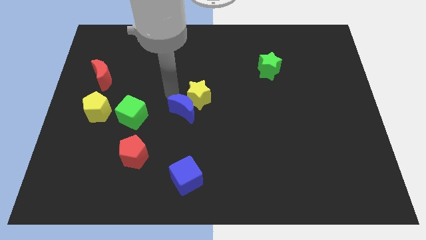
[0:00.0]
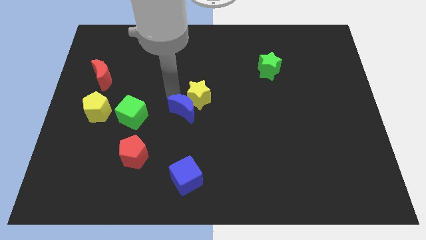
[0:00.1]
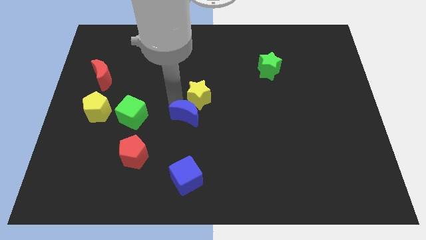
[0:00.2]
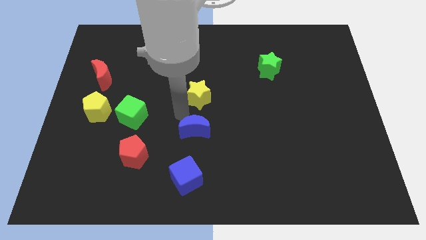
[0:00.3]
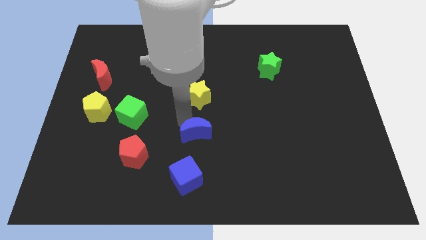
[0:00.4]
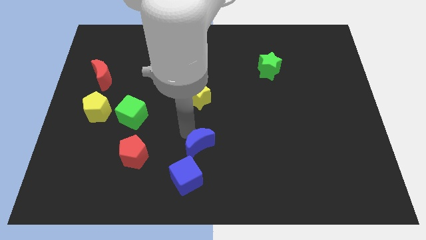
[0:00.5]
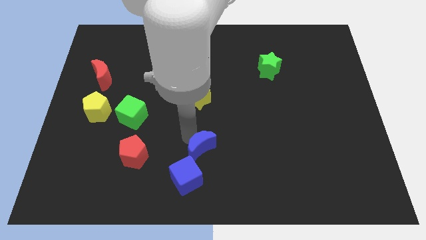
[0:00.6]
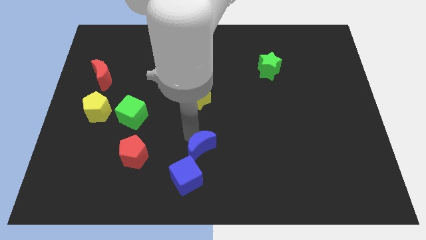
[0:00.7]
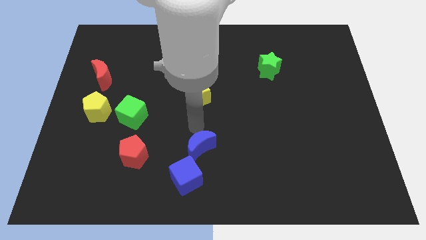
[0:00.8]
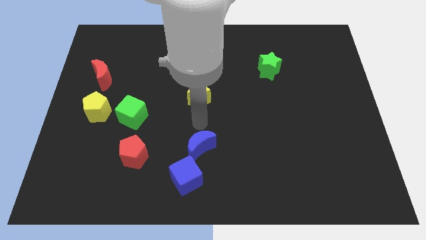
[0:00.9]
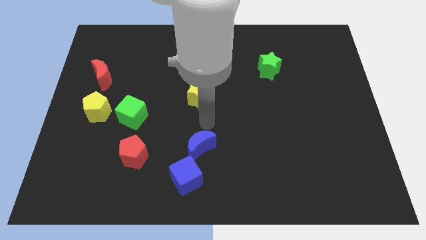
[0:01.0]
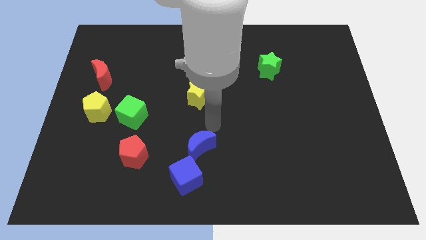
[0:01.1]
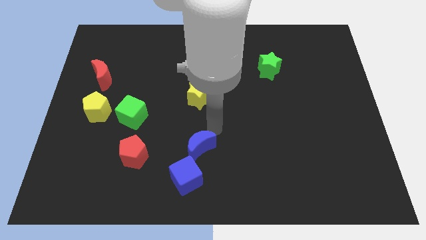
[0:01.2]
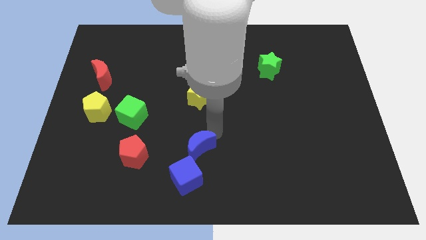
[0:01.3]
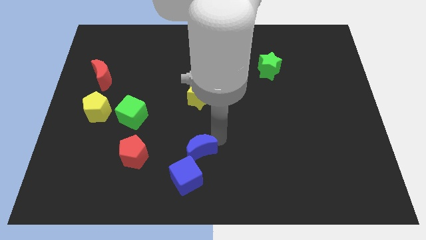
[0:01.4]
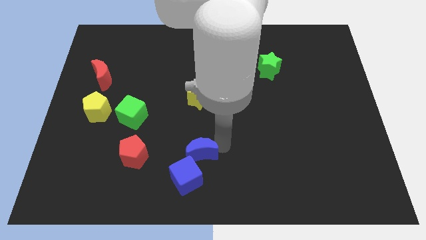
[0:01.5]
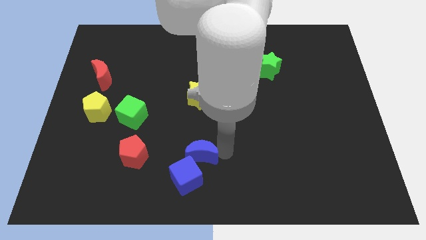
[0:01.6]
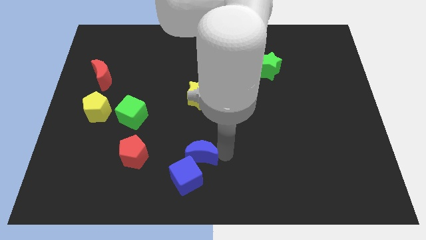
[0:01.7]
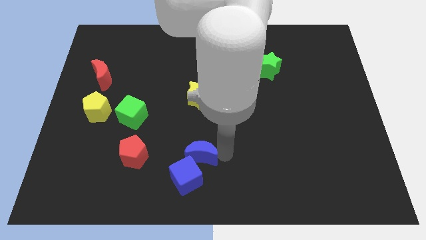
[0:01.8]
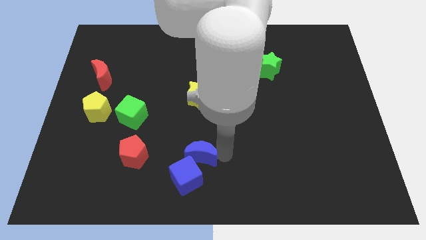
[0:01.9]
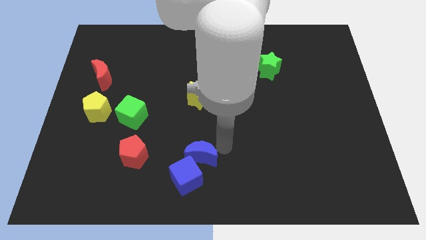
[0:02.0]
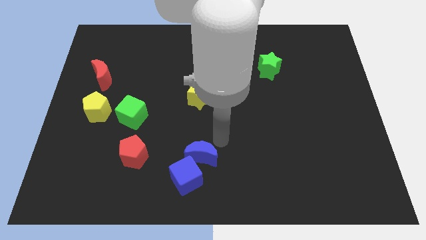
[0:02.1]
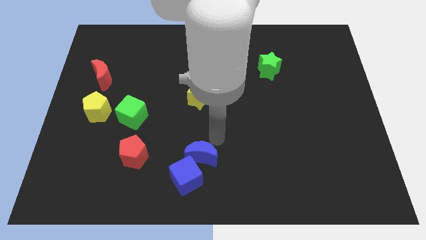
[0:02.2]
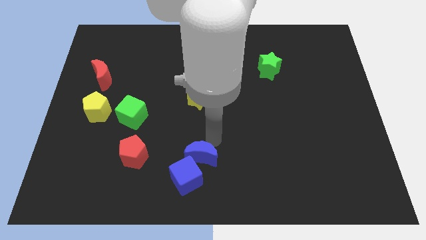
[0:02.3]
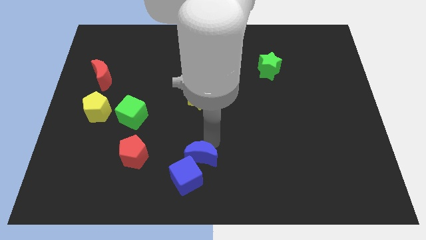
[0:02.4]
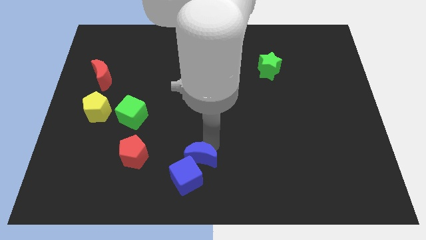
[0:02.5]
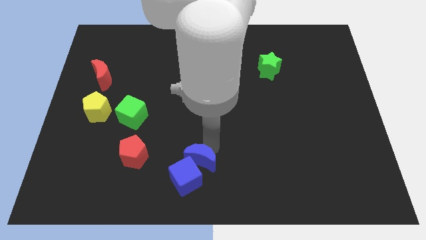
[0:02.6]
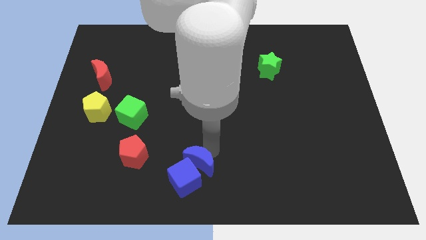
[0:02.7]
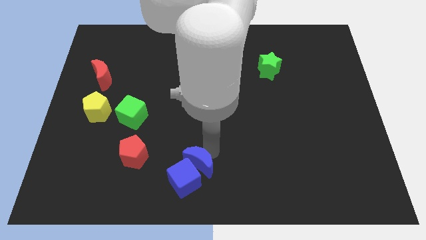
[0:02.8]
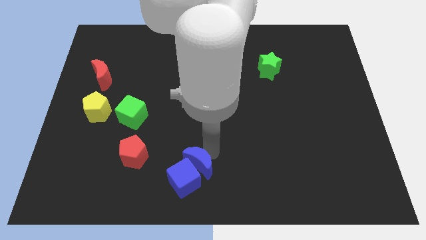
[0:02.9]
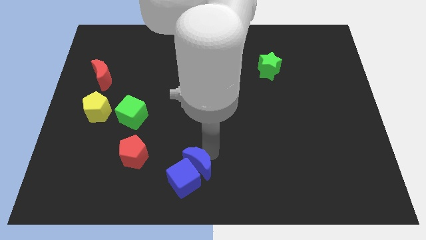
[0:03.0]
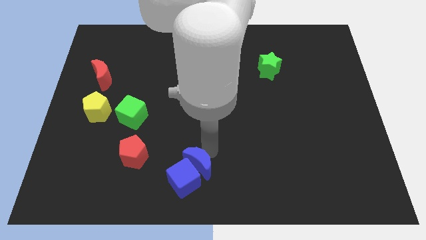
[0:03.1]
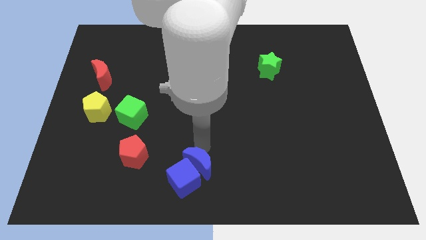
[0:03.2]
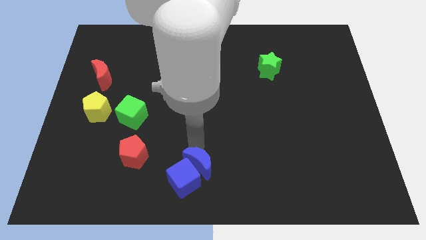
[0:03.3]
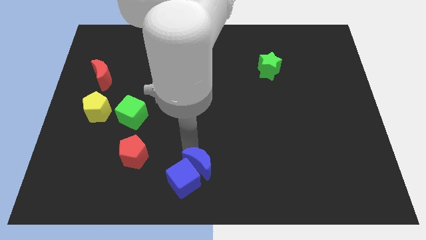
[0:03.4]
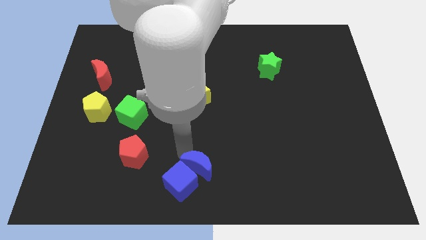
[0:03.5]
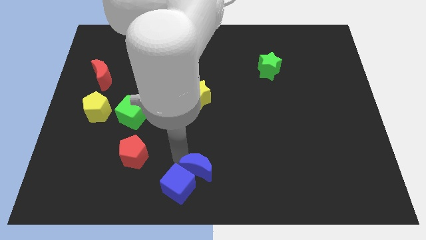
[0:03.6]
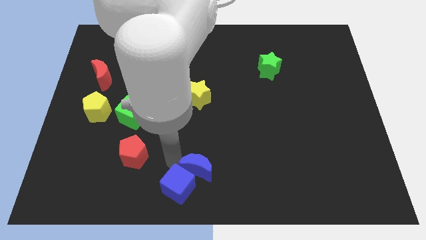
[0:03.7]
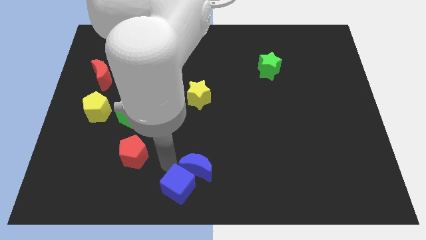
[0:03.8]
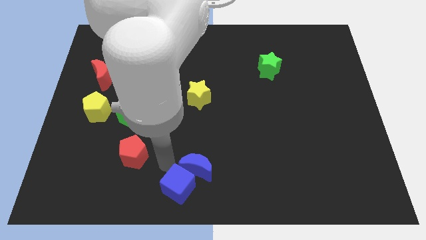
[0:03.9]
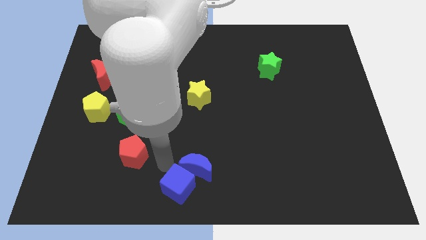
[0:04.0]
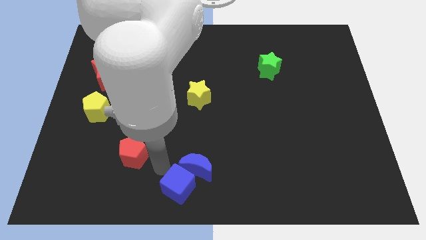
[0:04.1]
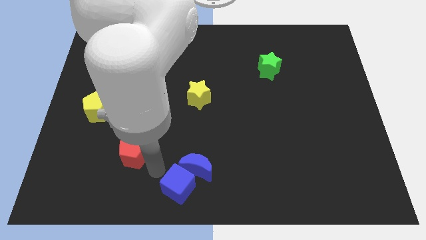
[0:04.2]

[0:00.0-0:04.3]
push the blue crescent into the blue cube

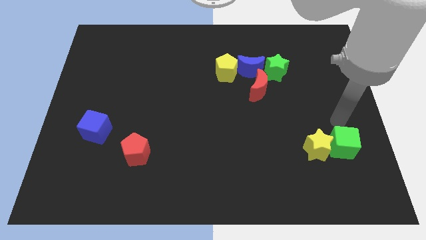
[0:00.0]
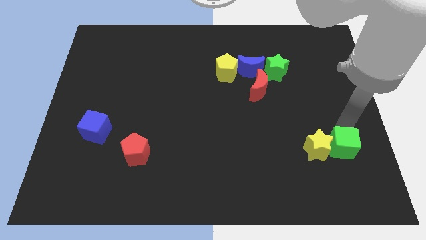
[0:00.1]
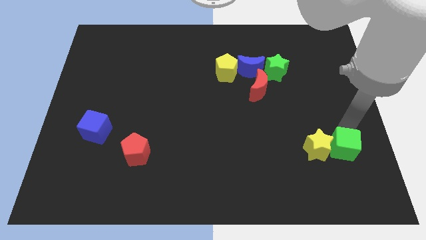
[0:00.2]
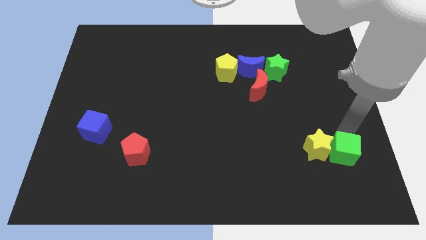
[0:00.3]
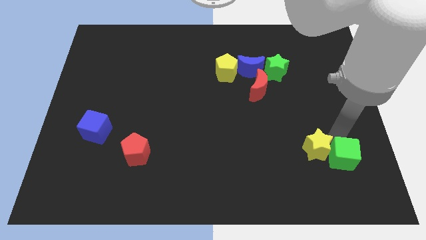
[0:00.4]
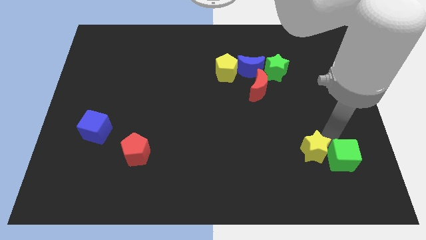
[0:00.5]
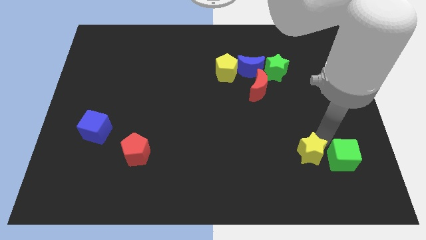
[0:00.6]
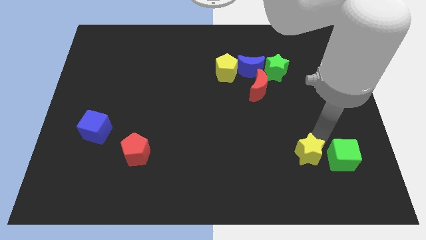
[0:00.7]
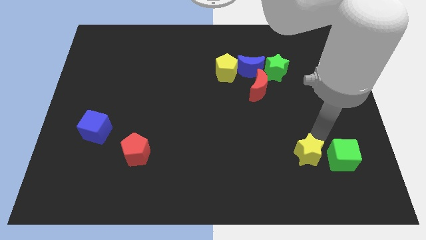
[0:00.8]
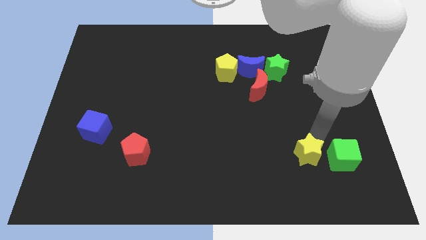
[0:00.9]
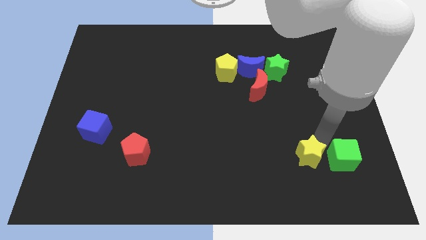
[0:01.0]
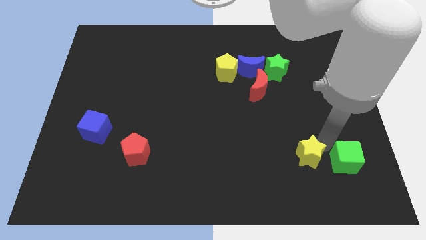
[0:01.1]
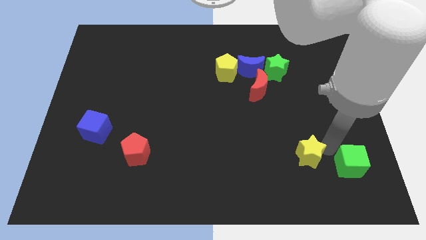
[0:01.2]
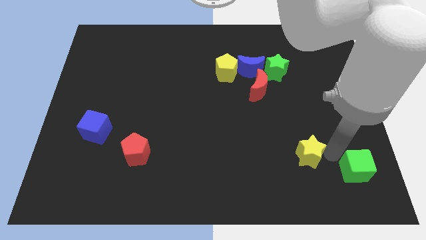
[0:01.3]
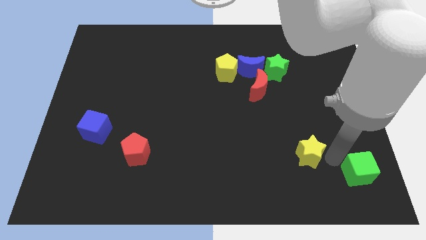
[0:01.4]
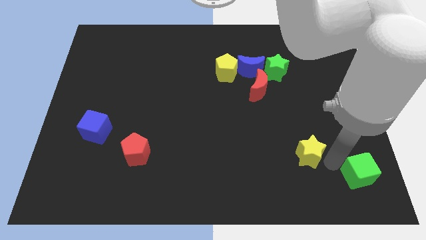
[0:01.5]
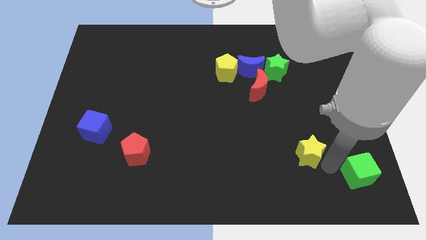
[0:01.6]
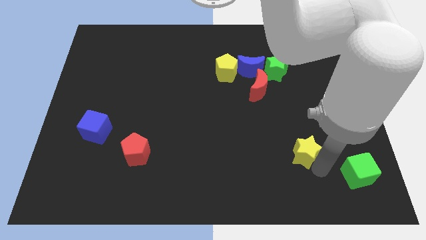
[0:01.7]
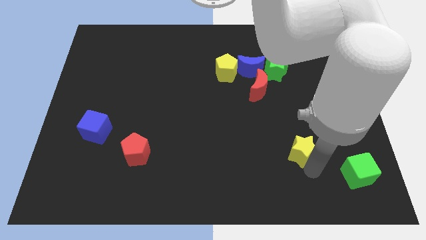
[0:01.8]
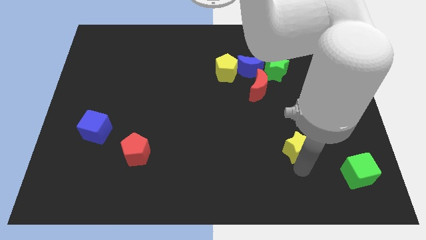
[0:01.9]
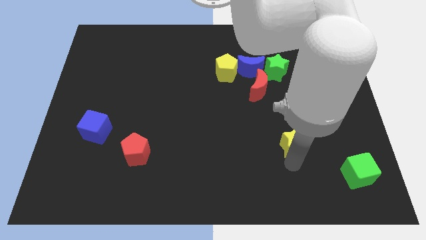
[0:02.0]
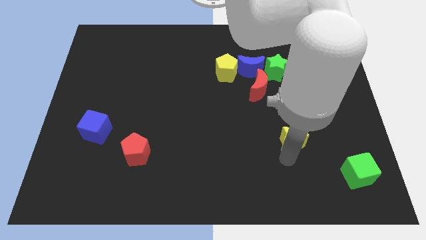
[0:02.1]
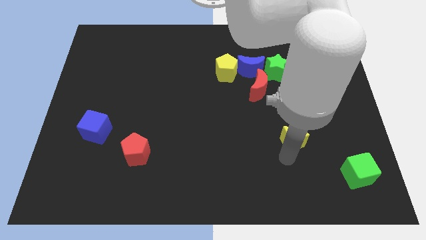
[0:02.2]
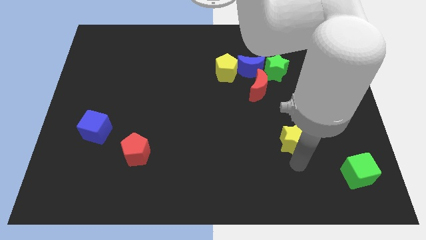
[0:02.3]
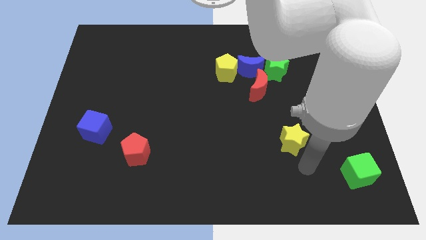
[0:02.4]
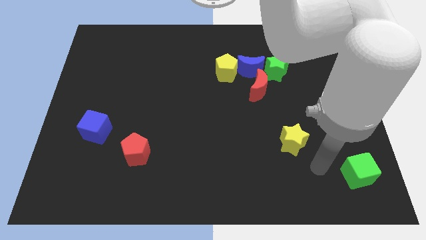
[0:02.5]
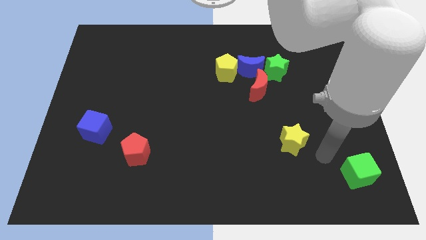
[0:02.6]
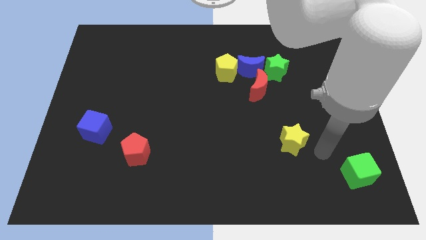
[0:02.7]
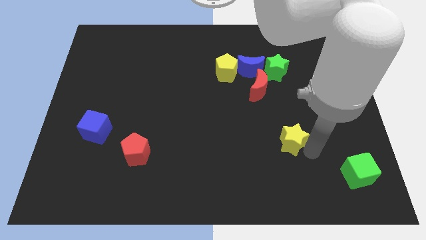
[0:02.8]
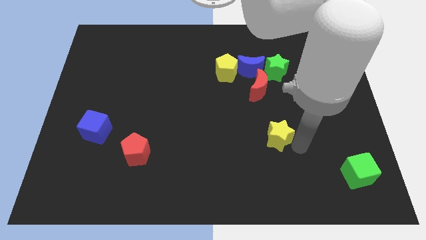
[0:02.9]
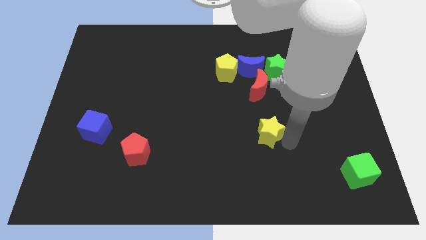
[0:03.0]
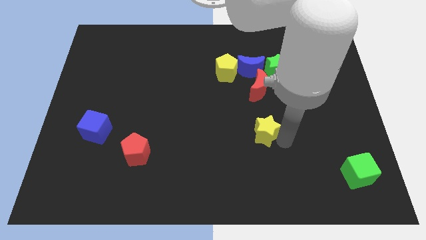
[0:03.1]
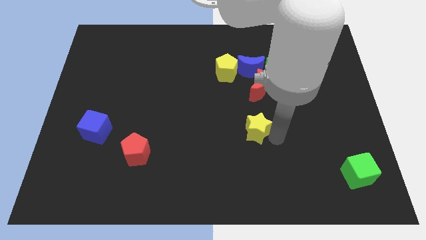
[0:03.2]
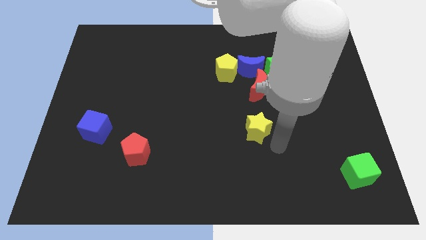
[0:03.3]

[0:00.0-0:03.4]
separate yellow star away from green cube

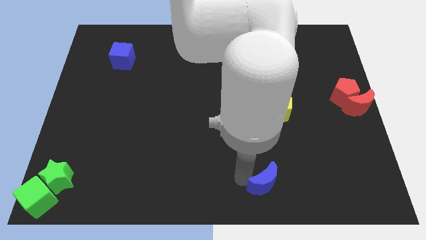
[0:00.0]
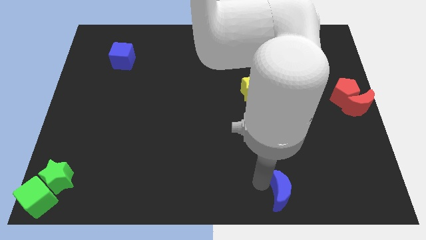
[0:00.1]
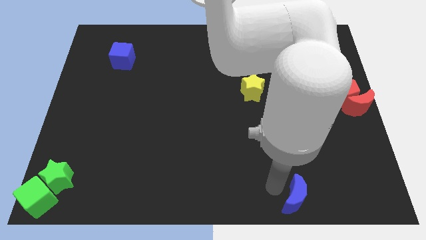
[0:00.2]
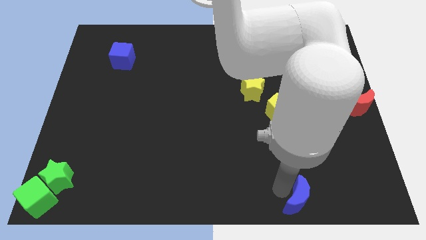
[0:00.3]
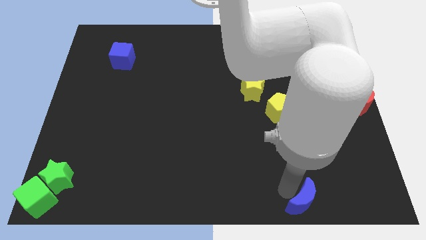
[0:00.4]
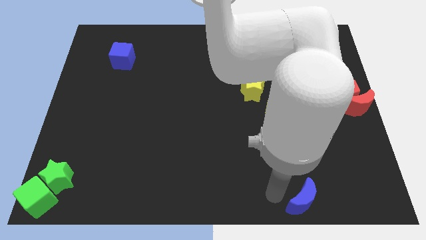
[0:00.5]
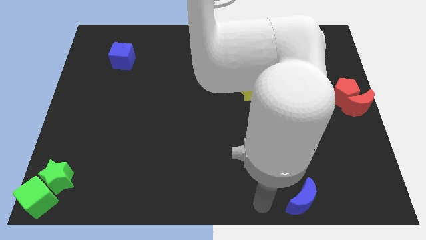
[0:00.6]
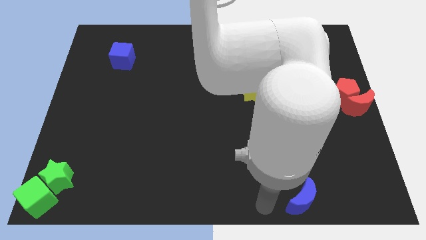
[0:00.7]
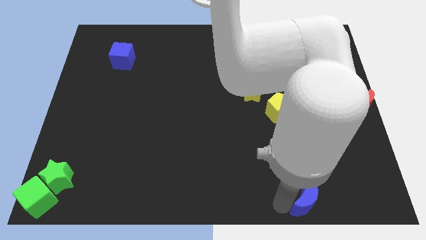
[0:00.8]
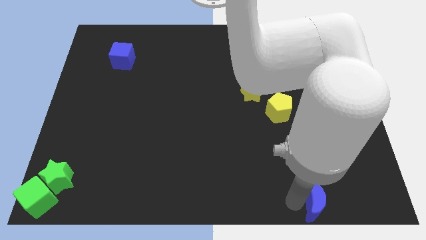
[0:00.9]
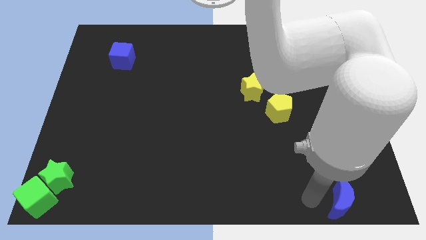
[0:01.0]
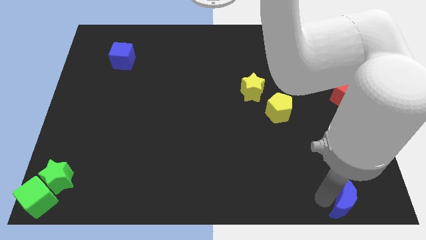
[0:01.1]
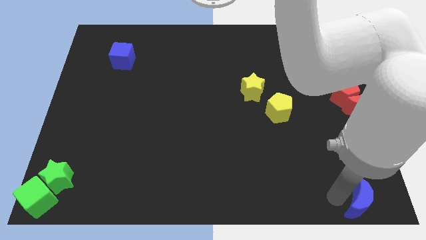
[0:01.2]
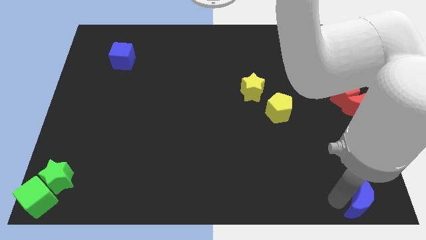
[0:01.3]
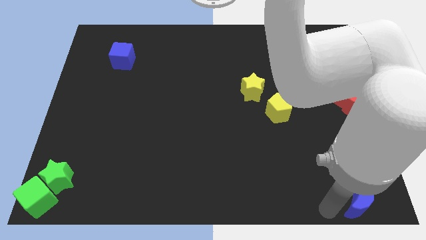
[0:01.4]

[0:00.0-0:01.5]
move the blue moon to bottom right
